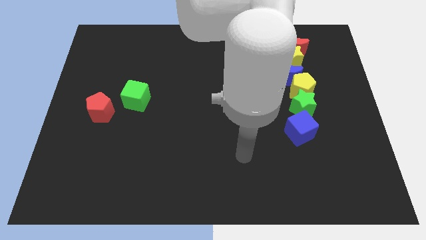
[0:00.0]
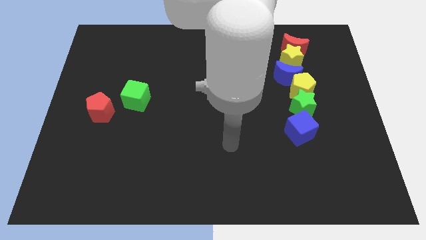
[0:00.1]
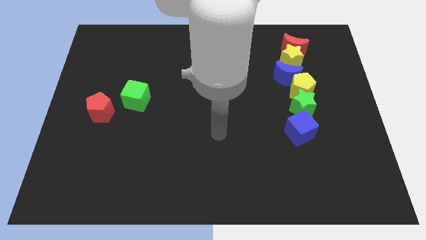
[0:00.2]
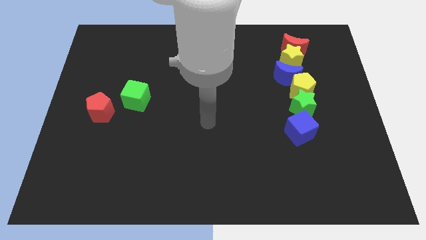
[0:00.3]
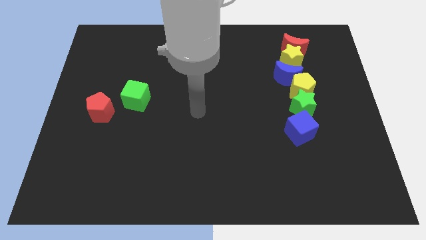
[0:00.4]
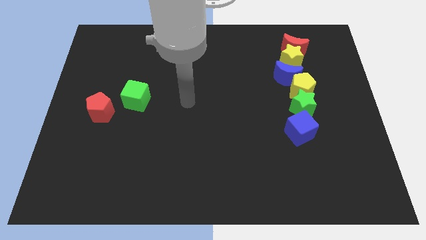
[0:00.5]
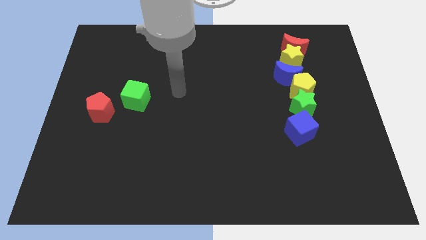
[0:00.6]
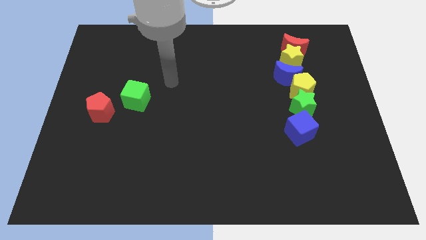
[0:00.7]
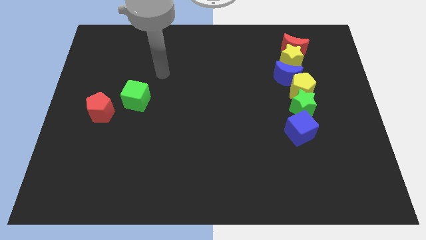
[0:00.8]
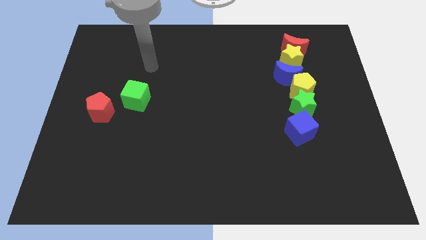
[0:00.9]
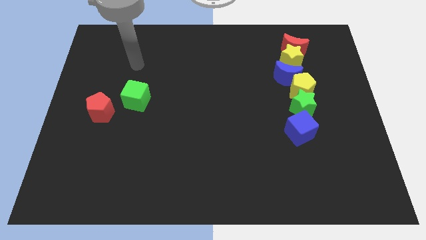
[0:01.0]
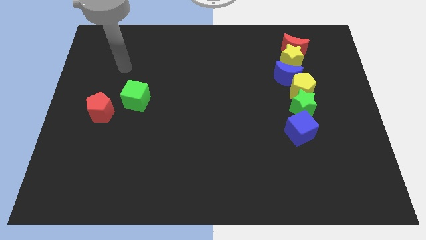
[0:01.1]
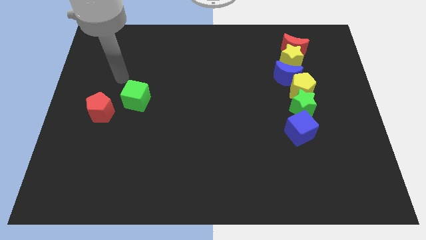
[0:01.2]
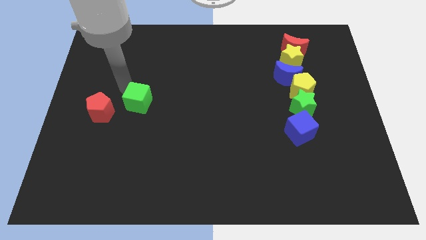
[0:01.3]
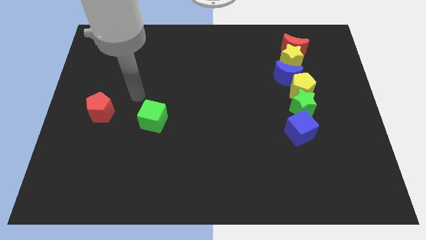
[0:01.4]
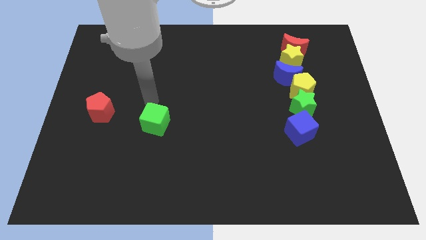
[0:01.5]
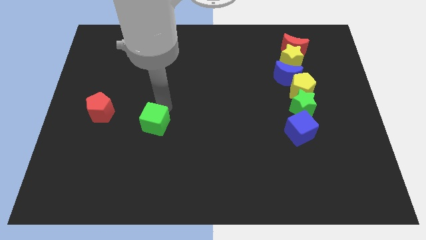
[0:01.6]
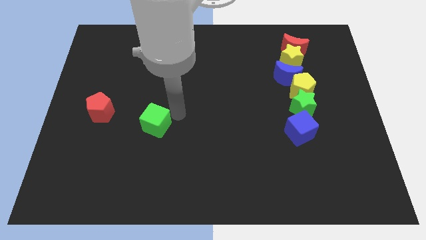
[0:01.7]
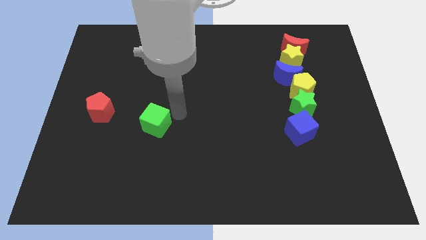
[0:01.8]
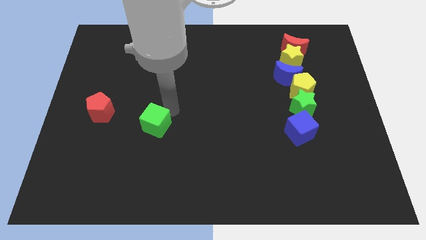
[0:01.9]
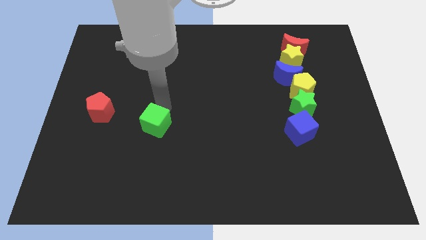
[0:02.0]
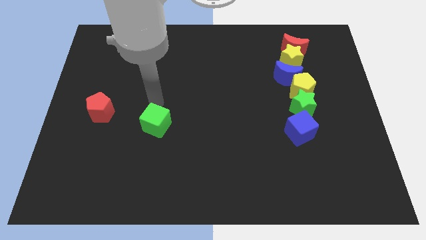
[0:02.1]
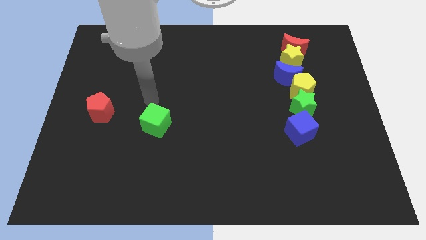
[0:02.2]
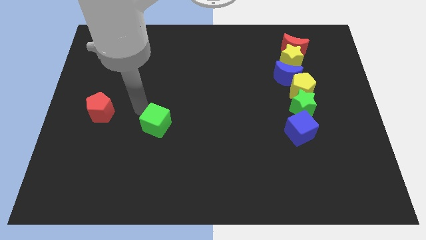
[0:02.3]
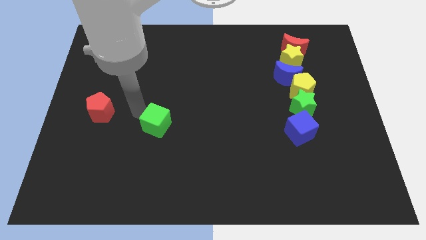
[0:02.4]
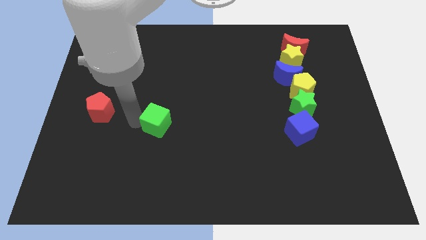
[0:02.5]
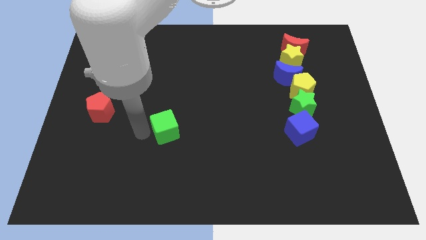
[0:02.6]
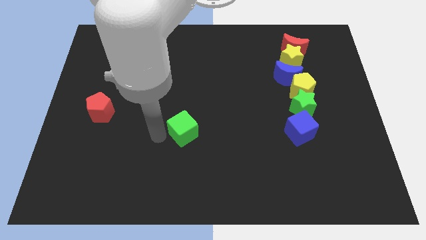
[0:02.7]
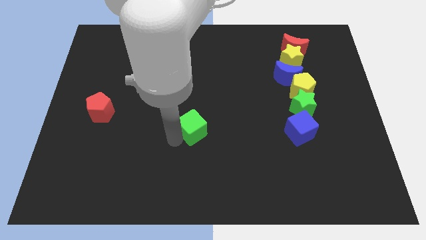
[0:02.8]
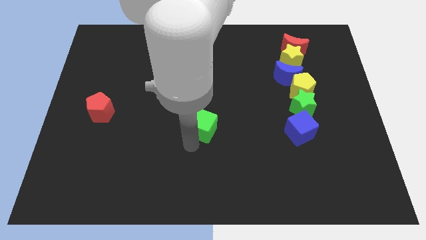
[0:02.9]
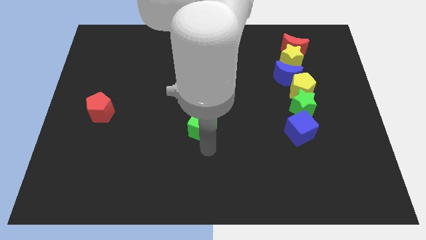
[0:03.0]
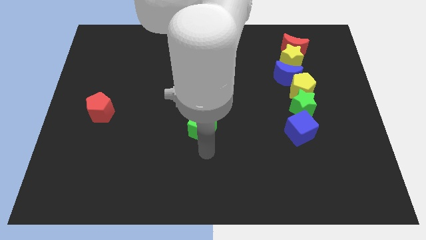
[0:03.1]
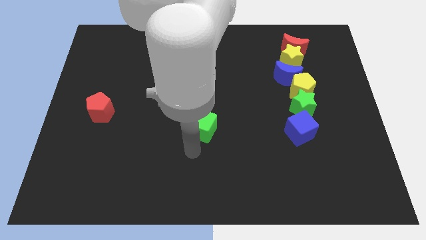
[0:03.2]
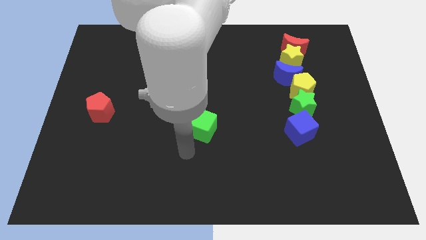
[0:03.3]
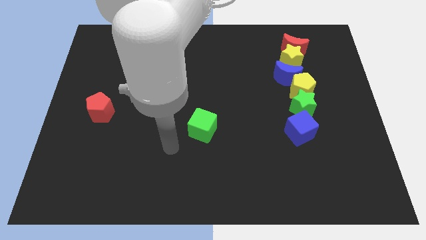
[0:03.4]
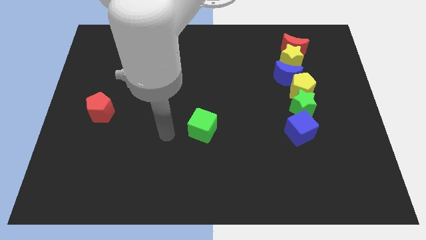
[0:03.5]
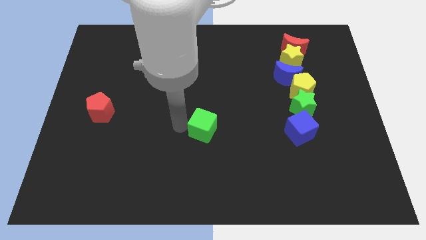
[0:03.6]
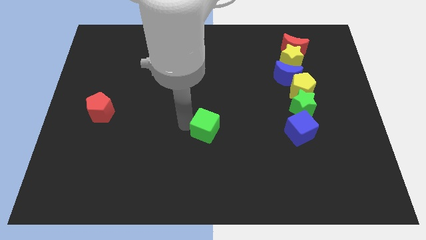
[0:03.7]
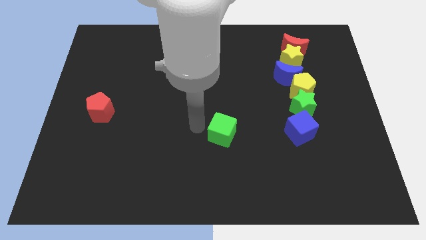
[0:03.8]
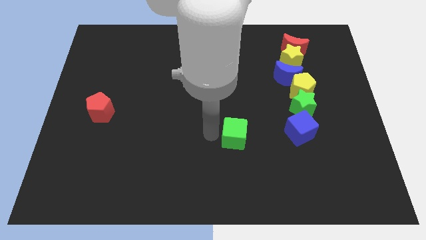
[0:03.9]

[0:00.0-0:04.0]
place the green cube to left side of the blue cube

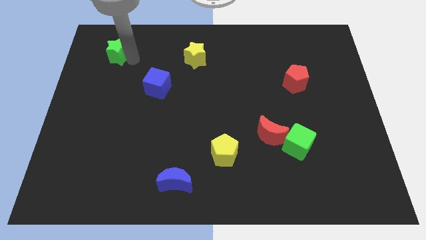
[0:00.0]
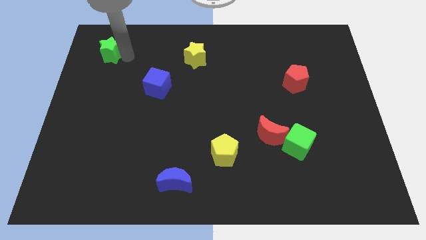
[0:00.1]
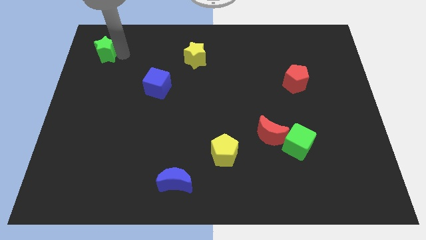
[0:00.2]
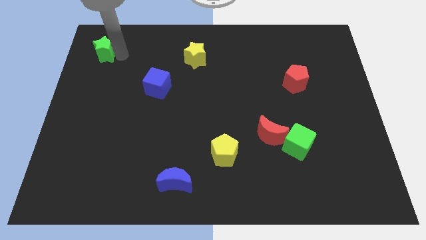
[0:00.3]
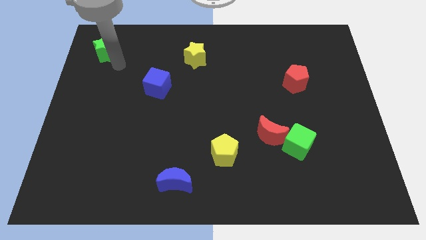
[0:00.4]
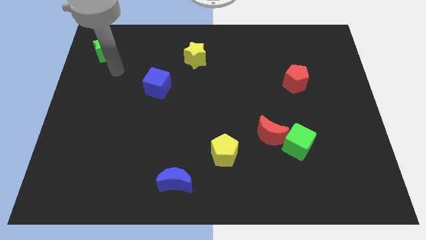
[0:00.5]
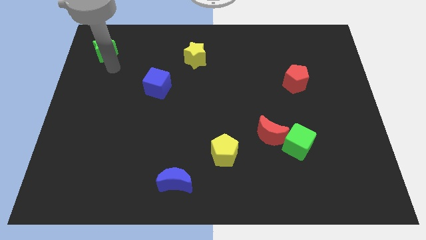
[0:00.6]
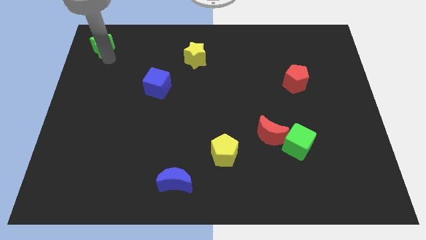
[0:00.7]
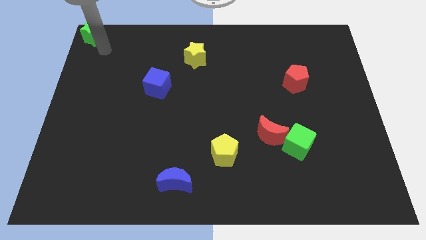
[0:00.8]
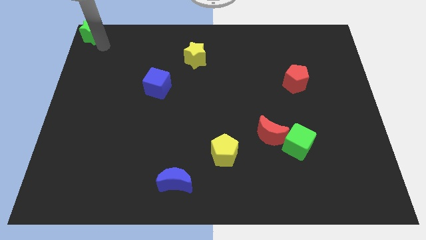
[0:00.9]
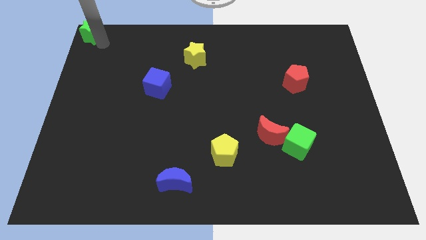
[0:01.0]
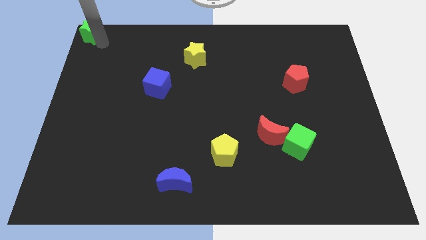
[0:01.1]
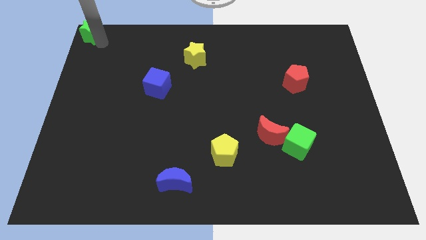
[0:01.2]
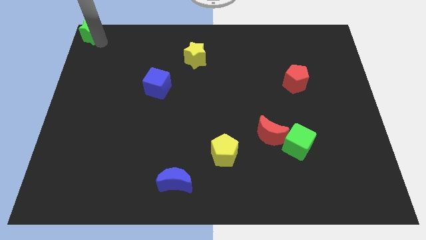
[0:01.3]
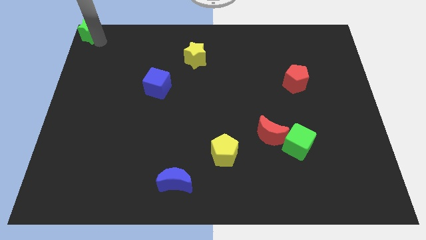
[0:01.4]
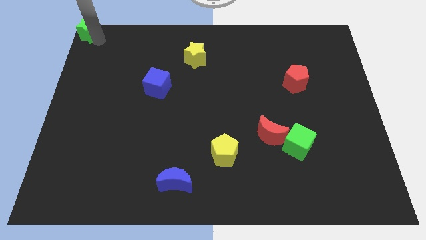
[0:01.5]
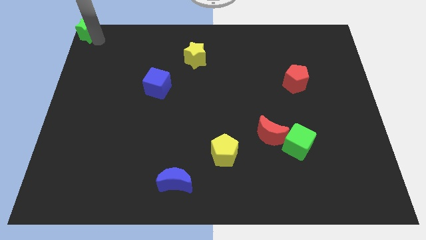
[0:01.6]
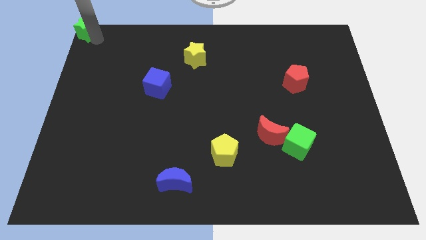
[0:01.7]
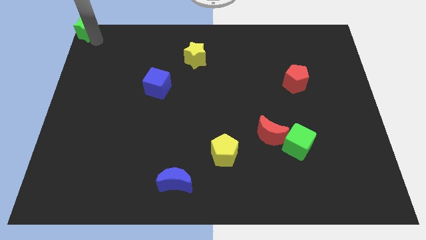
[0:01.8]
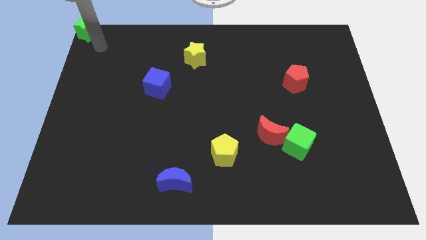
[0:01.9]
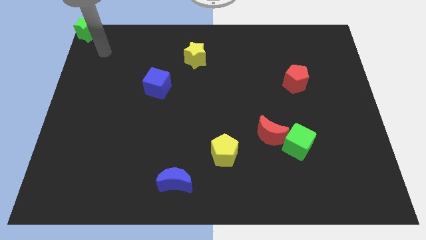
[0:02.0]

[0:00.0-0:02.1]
place the green star diagonal to blue cube at corner left

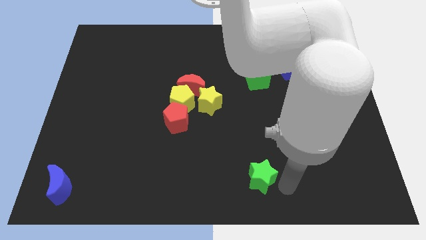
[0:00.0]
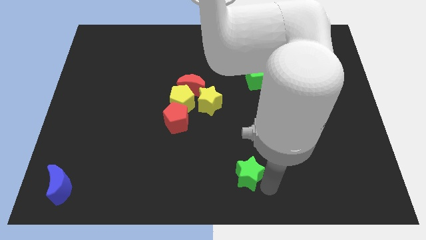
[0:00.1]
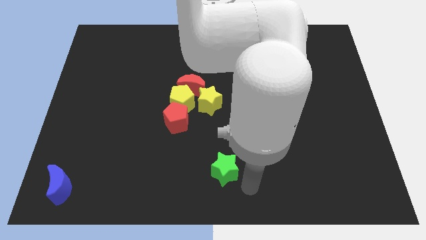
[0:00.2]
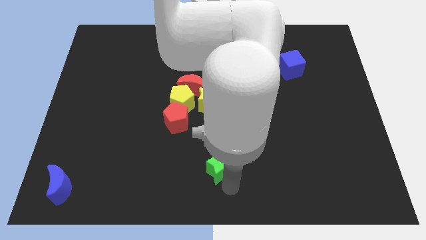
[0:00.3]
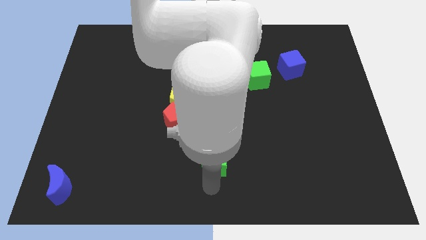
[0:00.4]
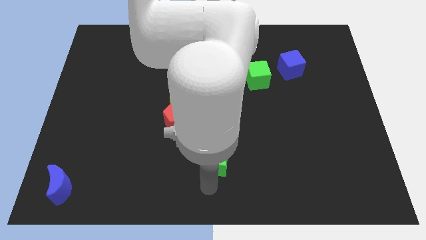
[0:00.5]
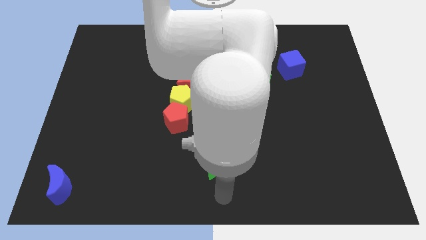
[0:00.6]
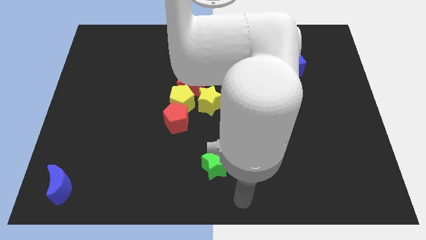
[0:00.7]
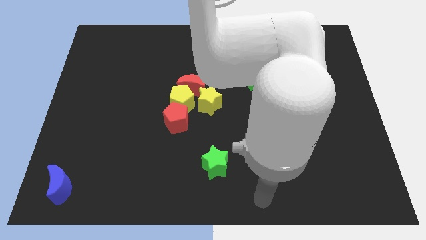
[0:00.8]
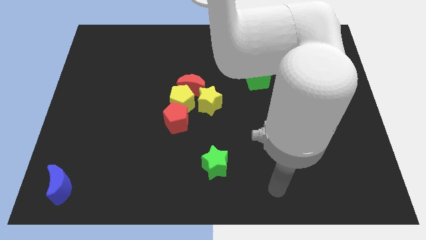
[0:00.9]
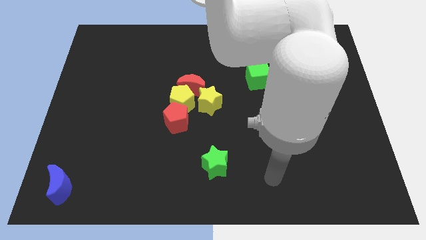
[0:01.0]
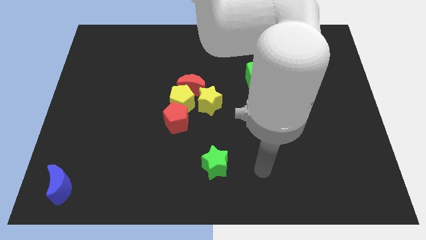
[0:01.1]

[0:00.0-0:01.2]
push the green star towards the center of the board

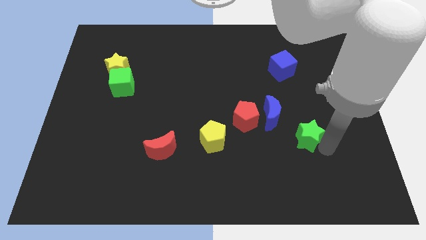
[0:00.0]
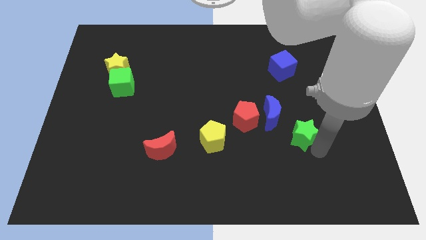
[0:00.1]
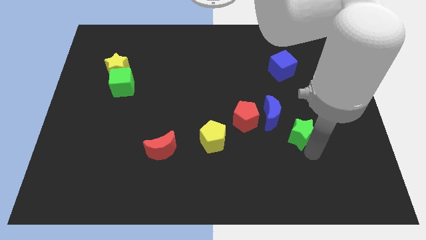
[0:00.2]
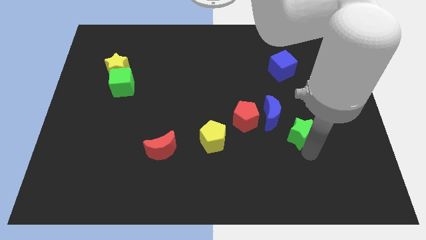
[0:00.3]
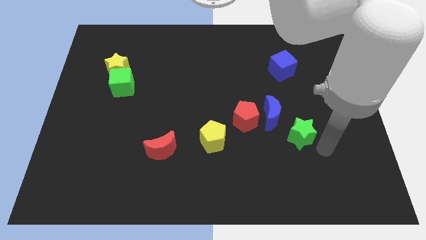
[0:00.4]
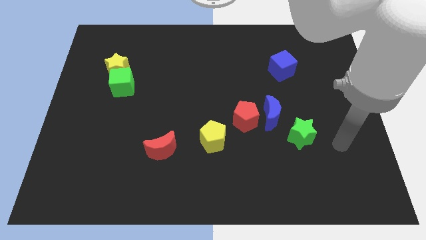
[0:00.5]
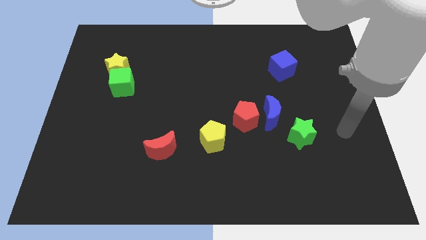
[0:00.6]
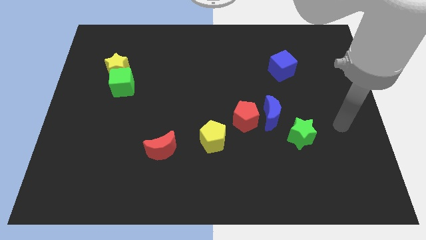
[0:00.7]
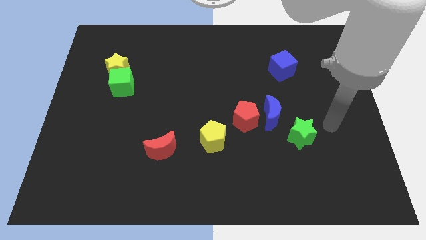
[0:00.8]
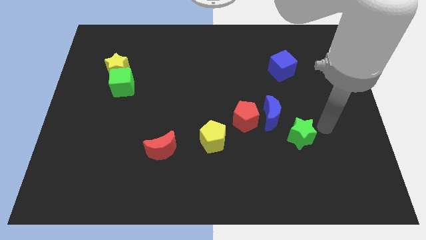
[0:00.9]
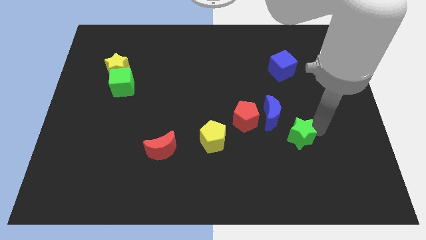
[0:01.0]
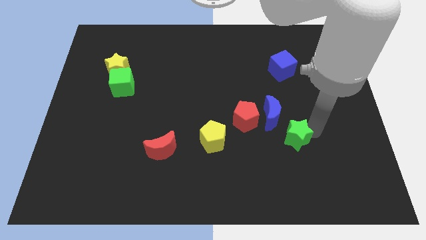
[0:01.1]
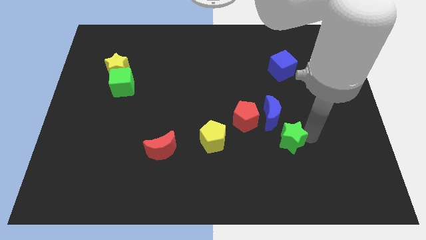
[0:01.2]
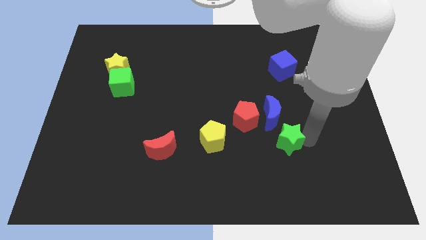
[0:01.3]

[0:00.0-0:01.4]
put the green star vertically below the blue cube

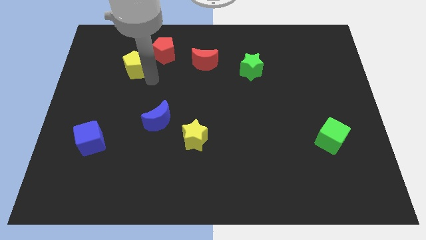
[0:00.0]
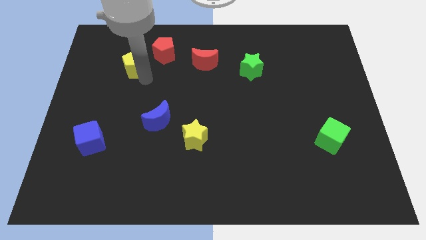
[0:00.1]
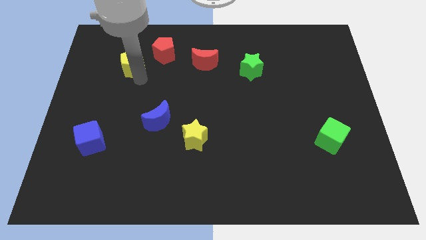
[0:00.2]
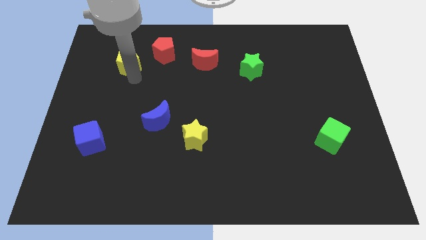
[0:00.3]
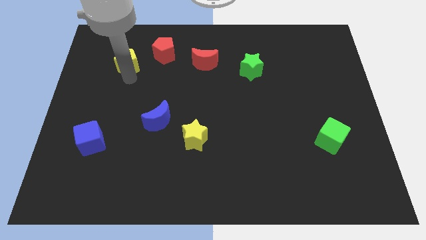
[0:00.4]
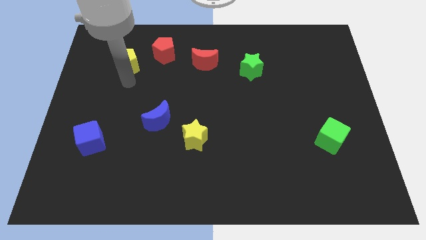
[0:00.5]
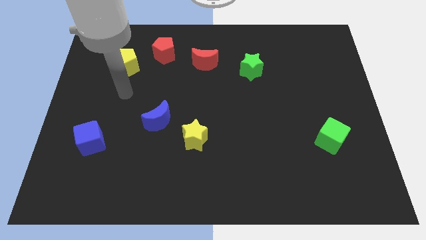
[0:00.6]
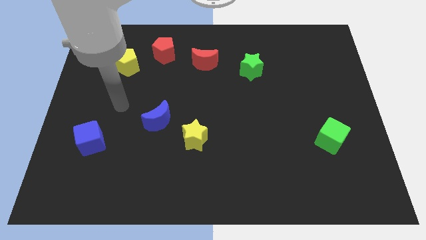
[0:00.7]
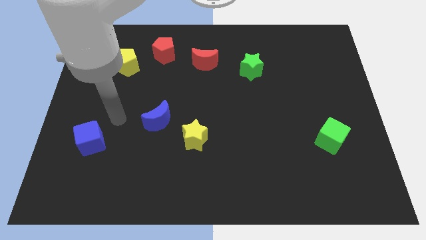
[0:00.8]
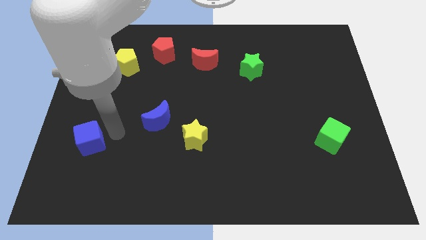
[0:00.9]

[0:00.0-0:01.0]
tap the yellow pentagon
